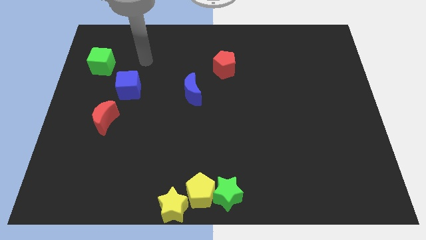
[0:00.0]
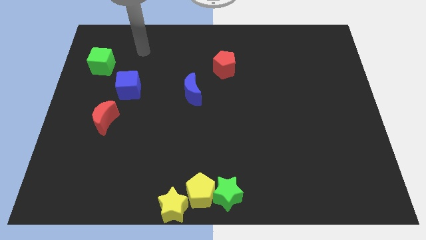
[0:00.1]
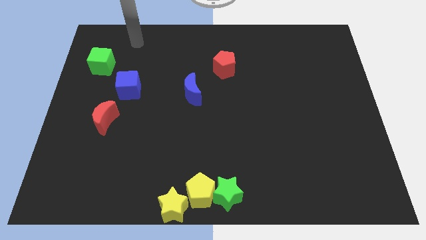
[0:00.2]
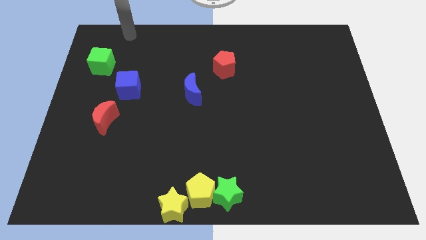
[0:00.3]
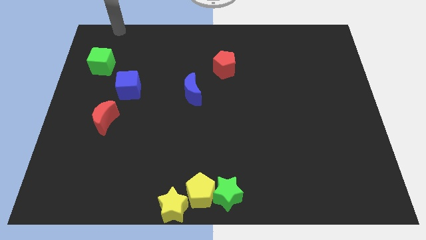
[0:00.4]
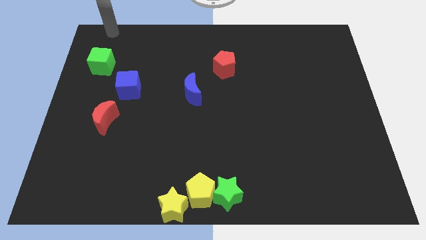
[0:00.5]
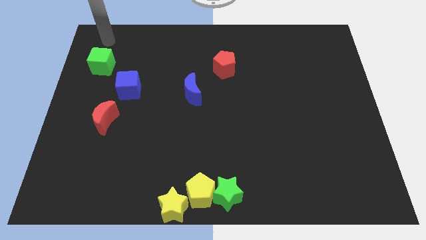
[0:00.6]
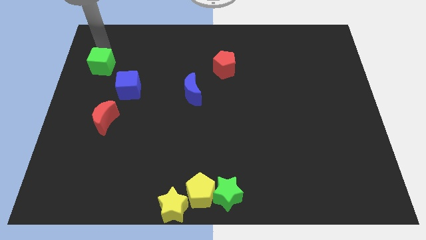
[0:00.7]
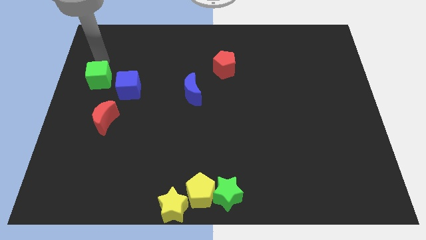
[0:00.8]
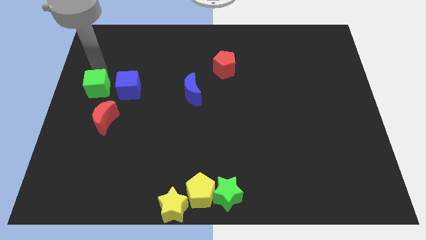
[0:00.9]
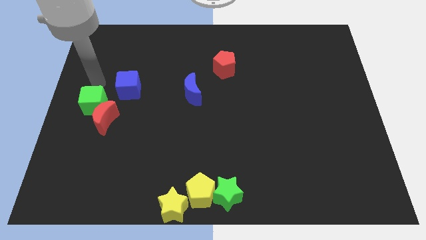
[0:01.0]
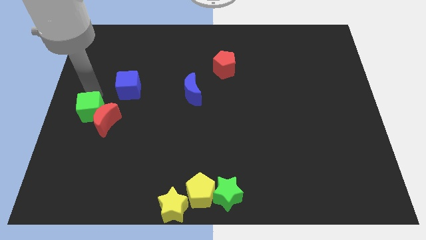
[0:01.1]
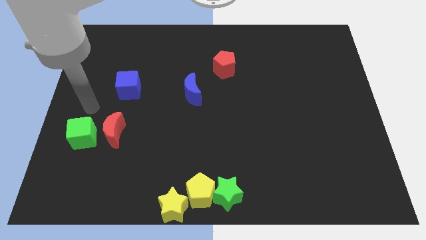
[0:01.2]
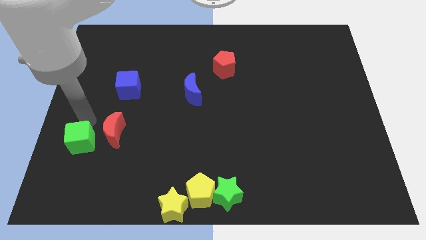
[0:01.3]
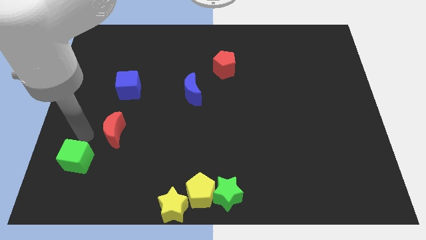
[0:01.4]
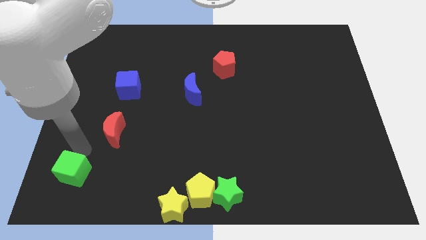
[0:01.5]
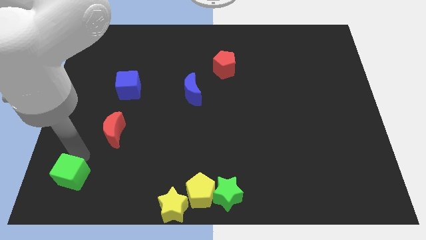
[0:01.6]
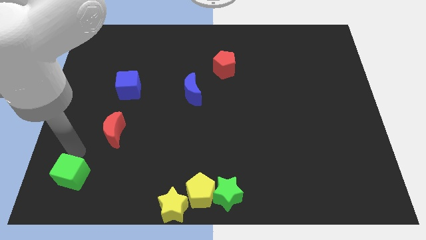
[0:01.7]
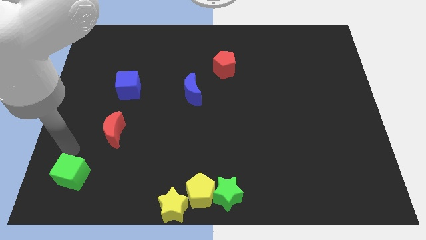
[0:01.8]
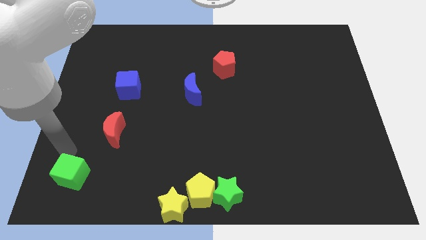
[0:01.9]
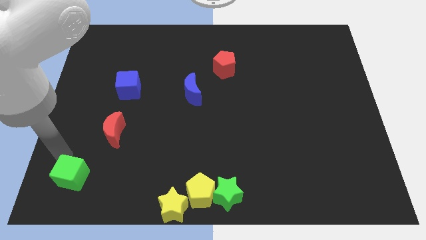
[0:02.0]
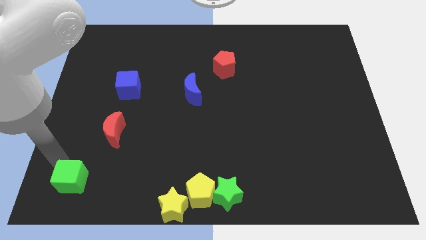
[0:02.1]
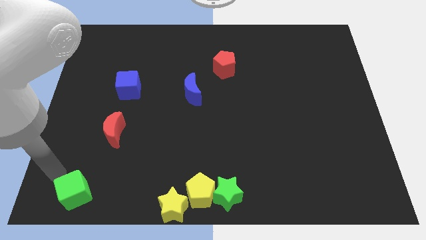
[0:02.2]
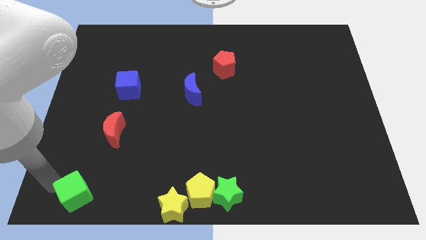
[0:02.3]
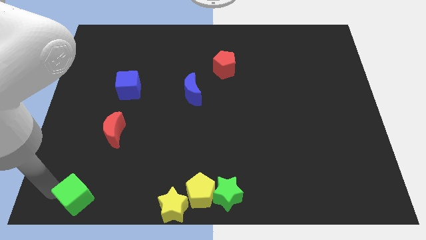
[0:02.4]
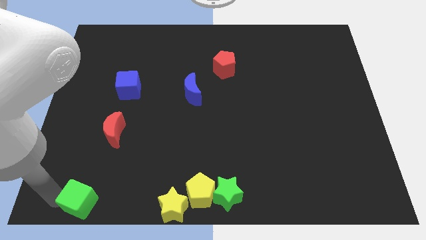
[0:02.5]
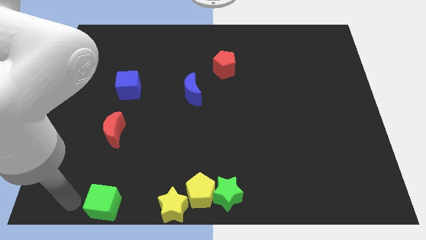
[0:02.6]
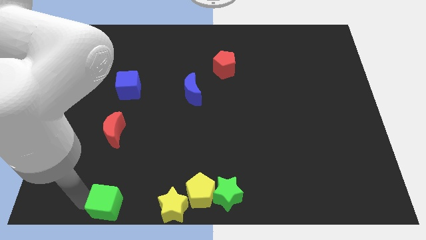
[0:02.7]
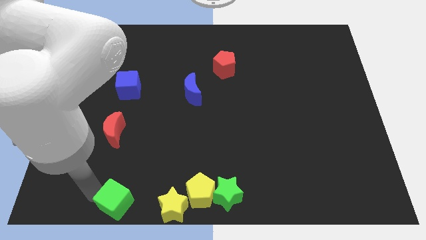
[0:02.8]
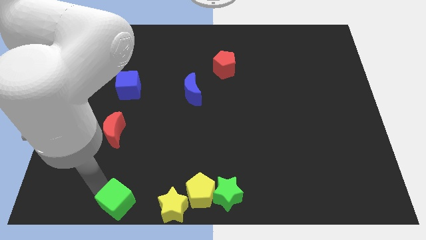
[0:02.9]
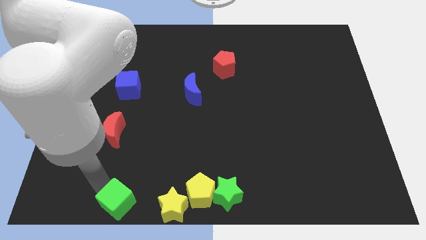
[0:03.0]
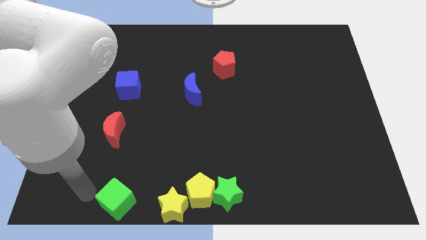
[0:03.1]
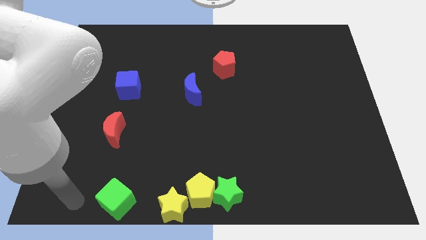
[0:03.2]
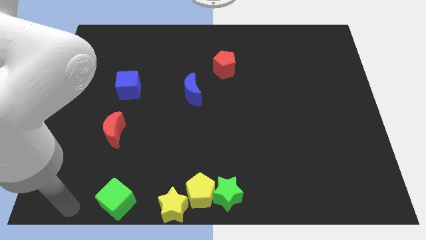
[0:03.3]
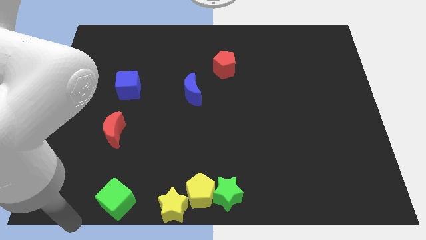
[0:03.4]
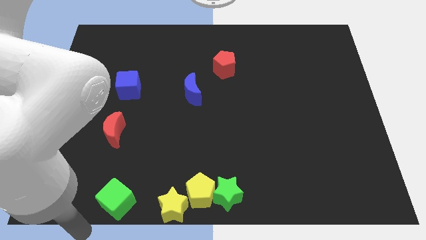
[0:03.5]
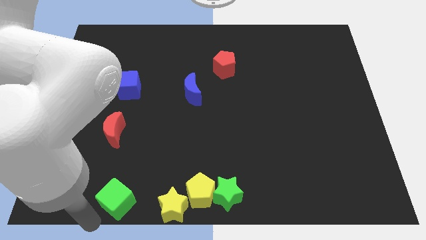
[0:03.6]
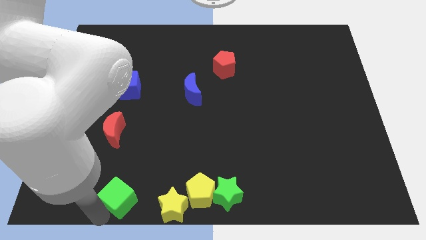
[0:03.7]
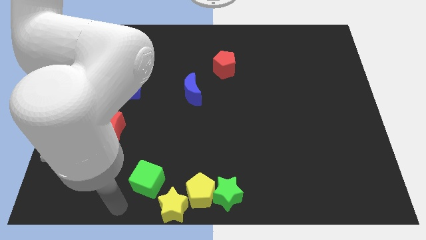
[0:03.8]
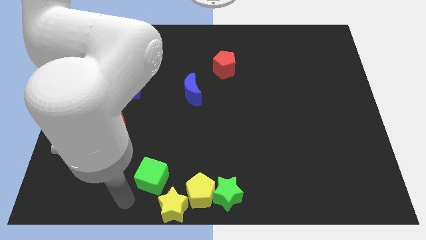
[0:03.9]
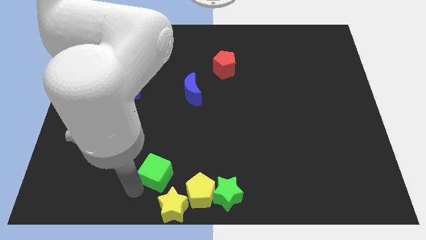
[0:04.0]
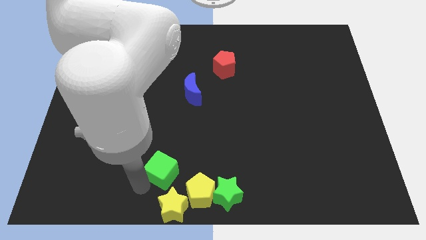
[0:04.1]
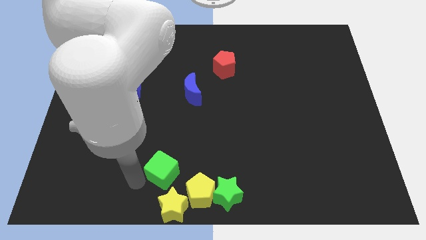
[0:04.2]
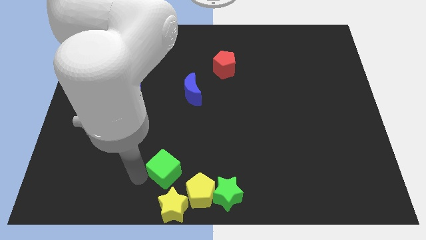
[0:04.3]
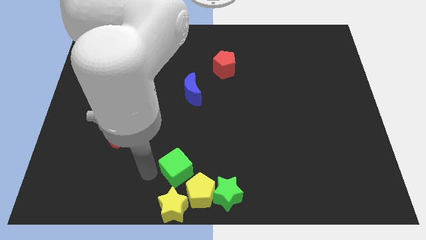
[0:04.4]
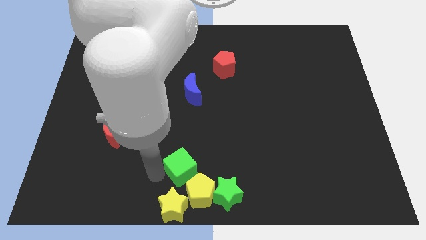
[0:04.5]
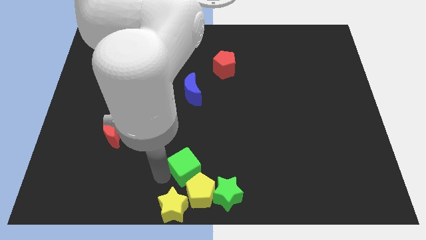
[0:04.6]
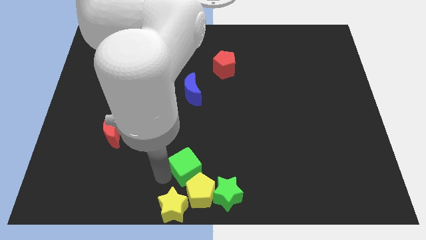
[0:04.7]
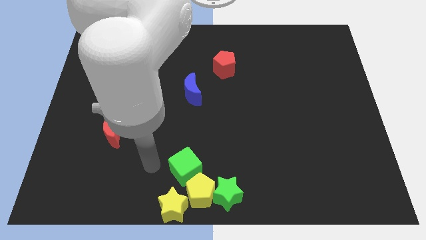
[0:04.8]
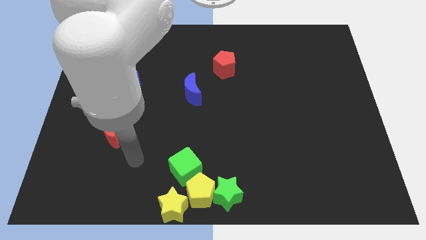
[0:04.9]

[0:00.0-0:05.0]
place the green cube towards bottom center of the board

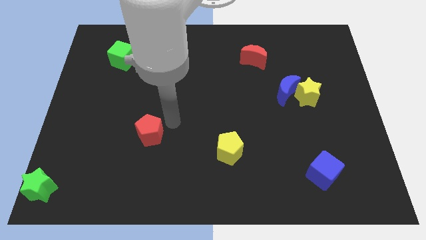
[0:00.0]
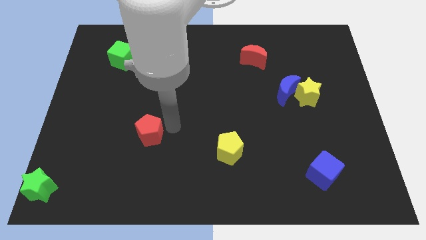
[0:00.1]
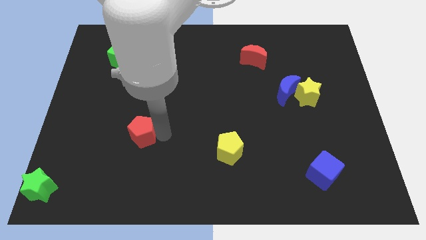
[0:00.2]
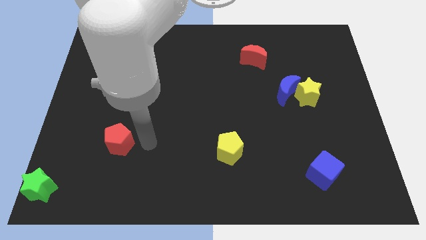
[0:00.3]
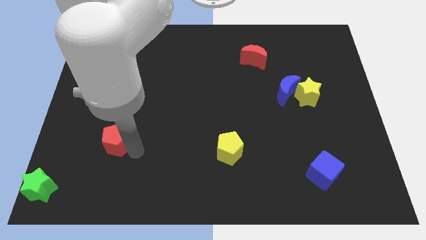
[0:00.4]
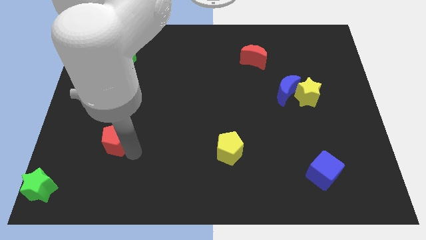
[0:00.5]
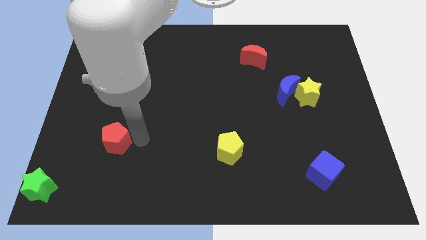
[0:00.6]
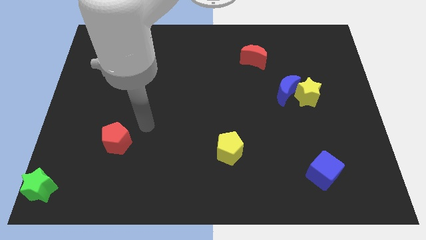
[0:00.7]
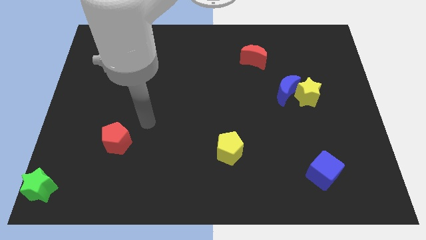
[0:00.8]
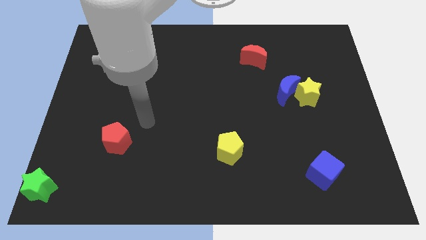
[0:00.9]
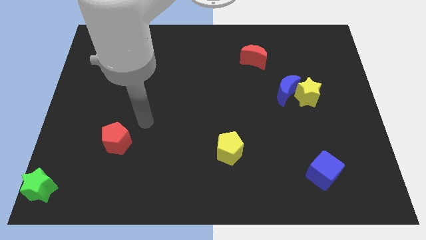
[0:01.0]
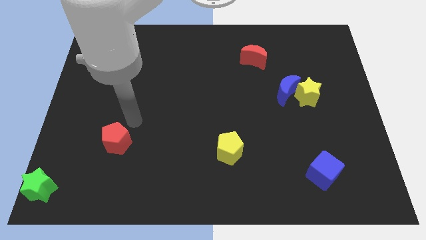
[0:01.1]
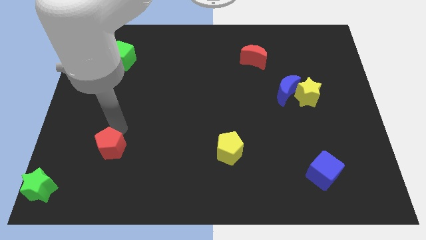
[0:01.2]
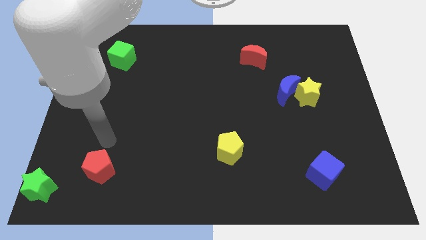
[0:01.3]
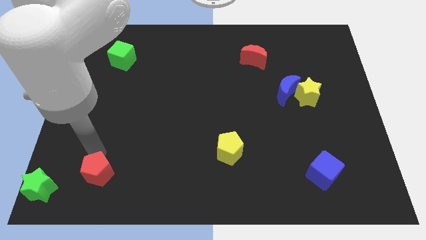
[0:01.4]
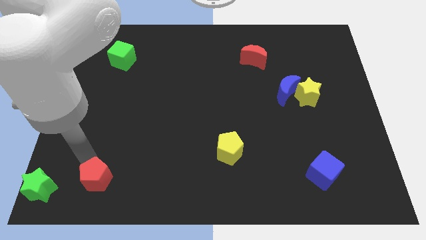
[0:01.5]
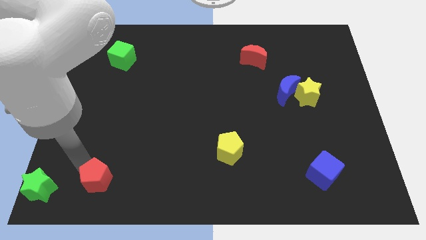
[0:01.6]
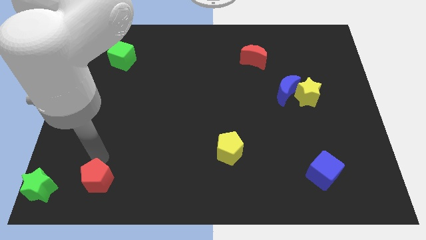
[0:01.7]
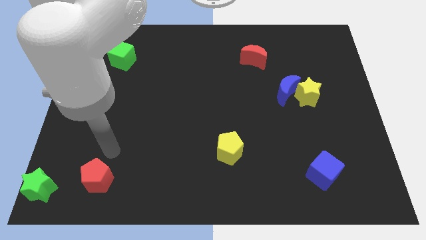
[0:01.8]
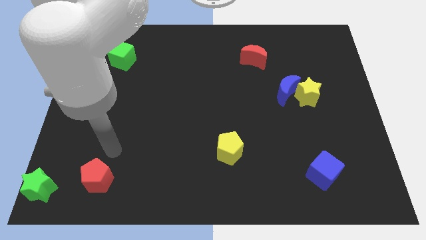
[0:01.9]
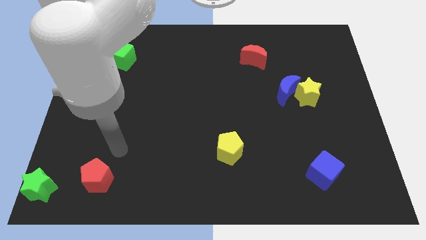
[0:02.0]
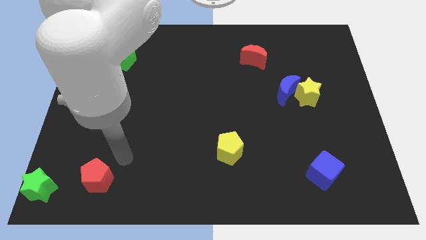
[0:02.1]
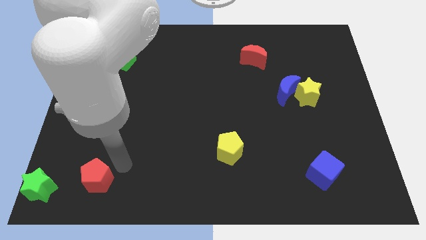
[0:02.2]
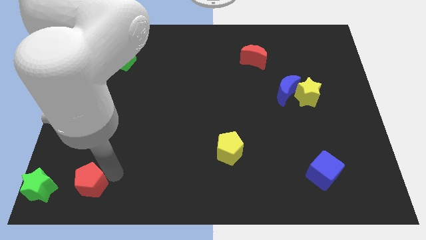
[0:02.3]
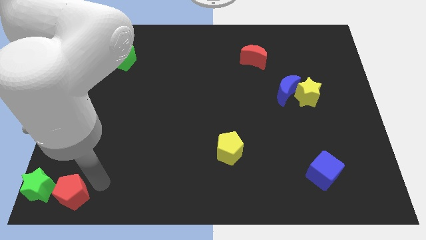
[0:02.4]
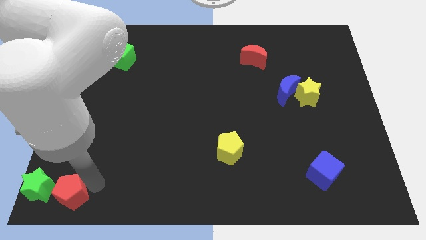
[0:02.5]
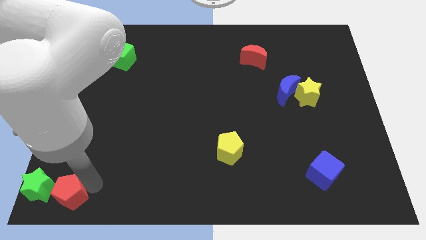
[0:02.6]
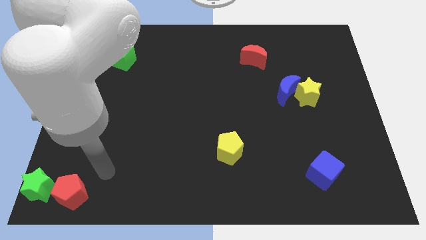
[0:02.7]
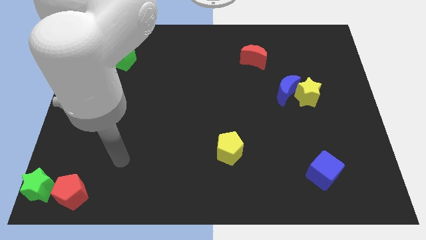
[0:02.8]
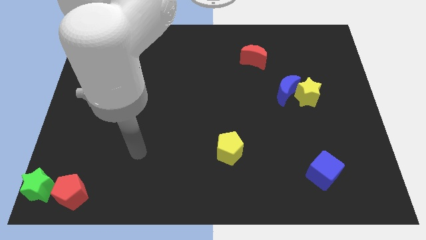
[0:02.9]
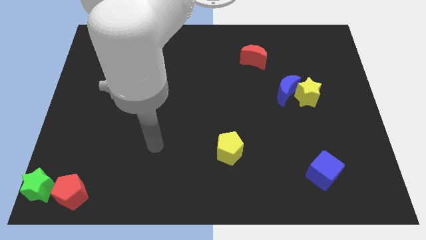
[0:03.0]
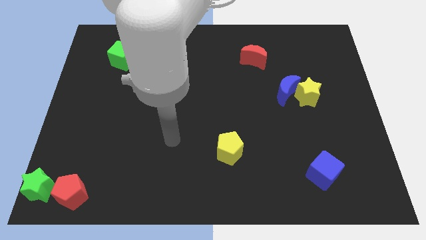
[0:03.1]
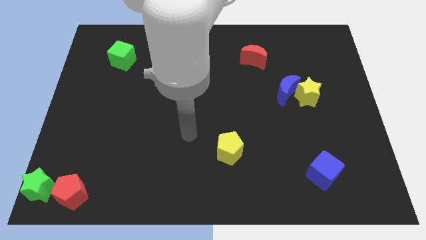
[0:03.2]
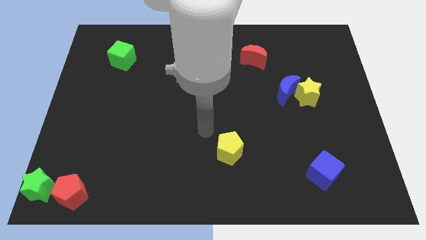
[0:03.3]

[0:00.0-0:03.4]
place the red pentagon to the left of the green star

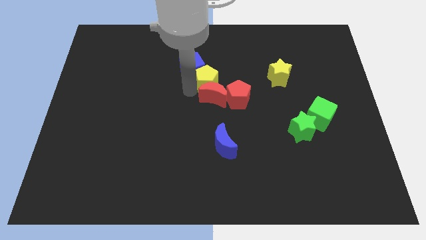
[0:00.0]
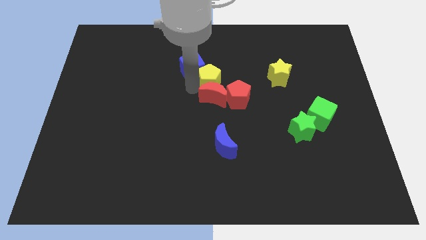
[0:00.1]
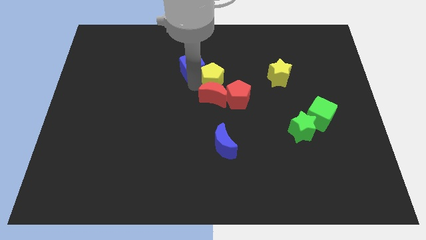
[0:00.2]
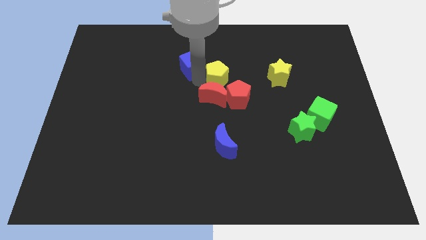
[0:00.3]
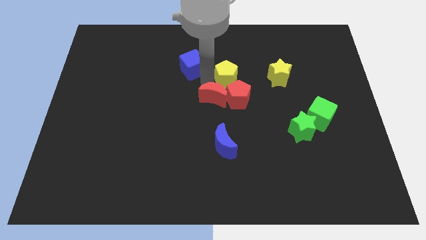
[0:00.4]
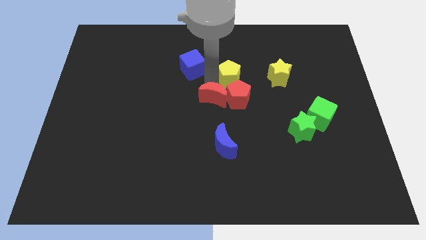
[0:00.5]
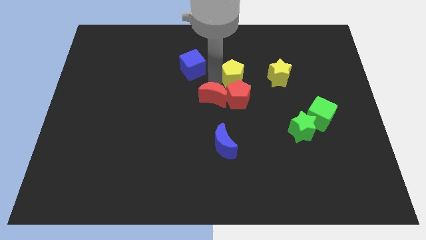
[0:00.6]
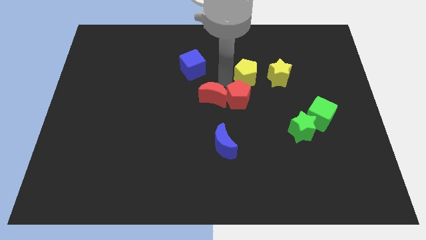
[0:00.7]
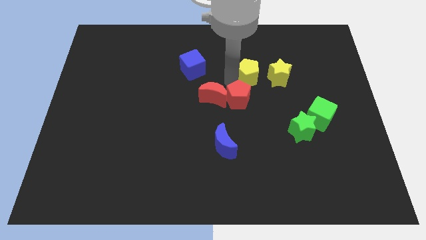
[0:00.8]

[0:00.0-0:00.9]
separate the yellow pentagon from red moon
